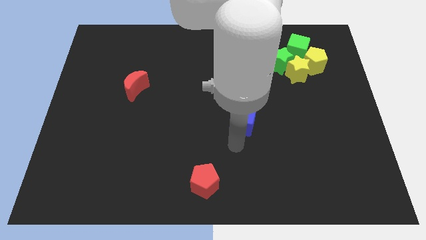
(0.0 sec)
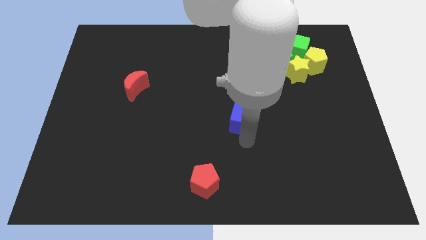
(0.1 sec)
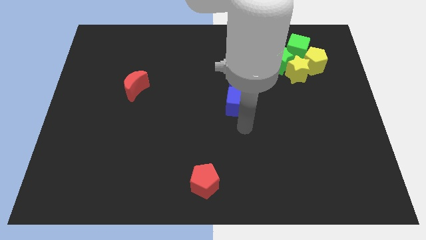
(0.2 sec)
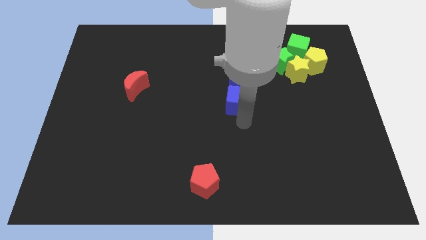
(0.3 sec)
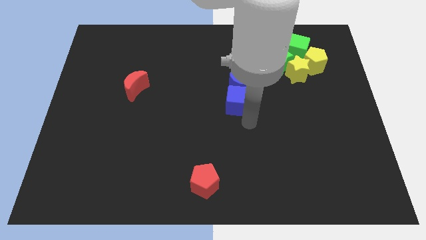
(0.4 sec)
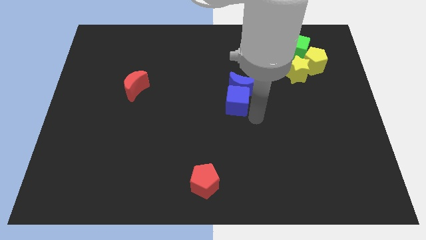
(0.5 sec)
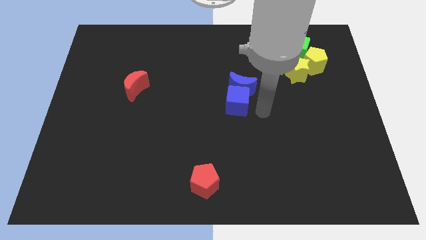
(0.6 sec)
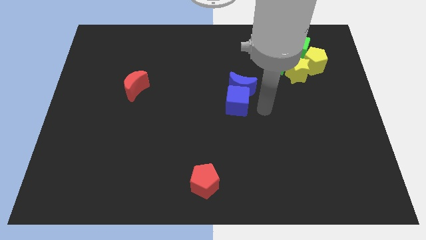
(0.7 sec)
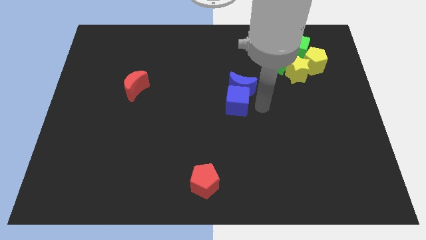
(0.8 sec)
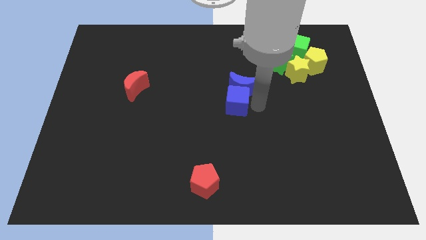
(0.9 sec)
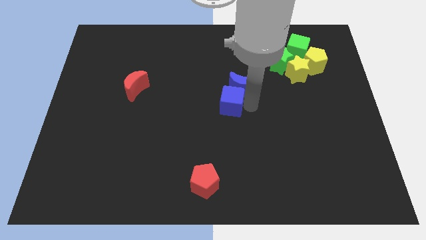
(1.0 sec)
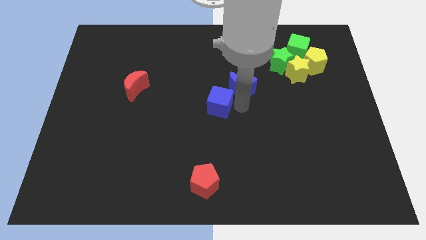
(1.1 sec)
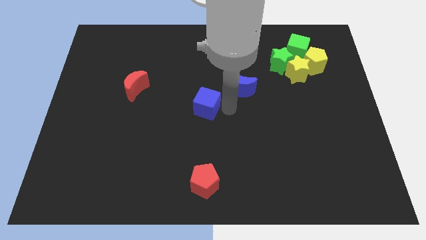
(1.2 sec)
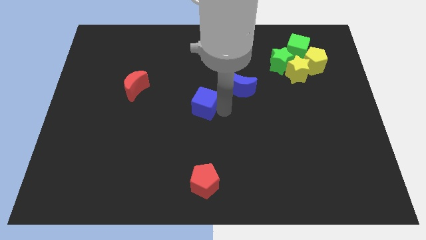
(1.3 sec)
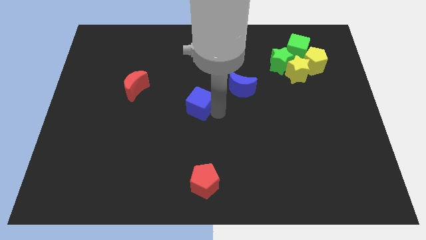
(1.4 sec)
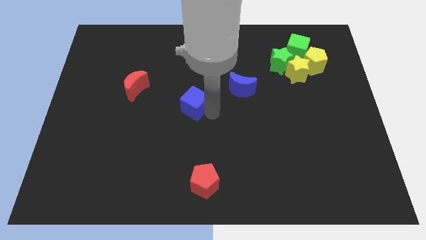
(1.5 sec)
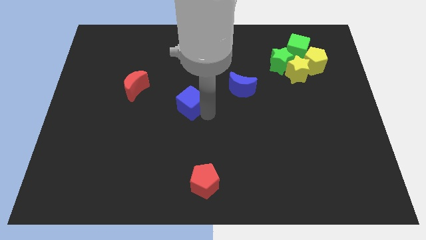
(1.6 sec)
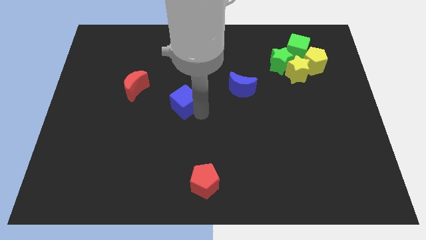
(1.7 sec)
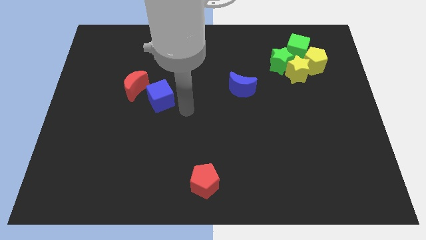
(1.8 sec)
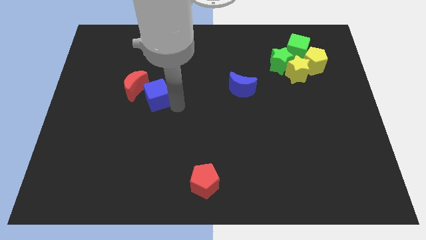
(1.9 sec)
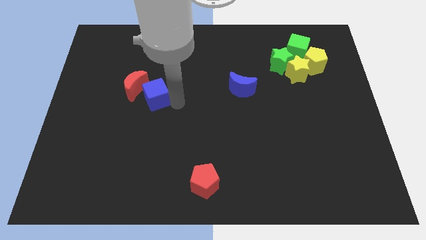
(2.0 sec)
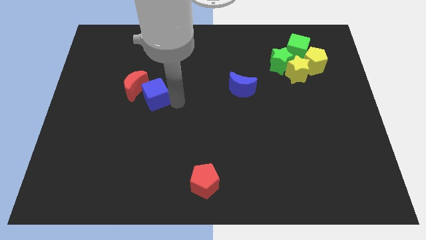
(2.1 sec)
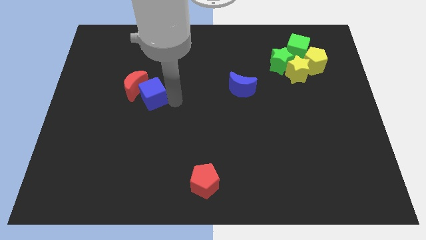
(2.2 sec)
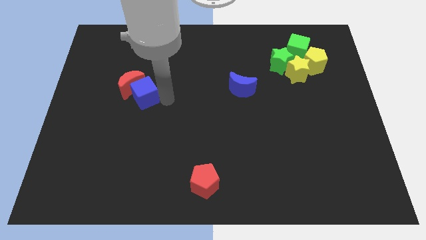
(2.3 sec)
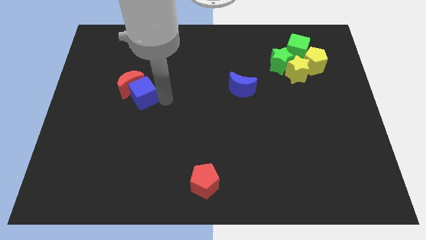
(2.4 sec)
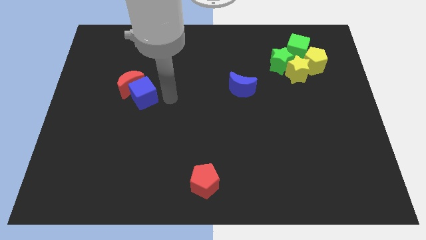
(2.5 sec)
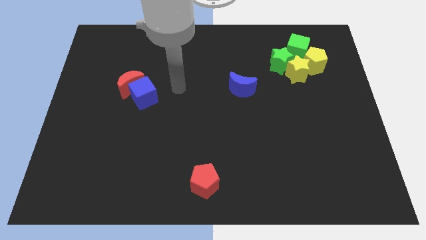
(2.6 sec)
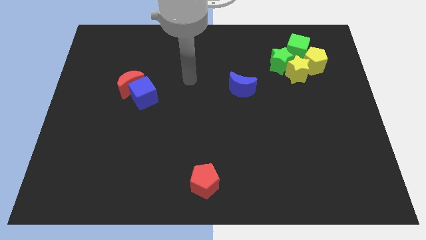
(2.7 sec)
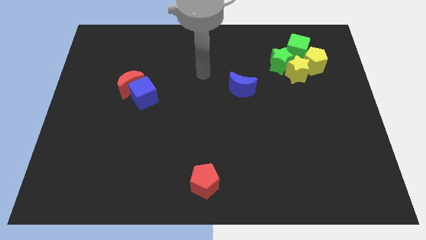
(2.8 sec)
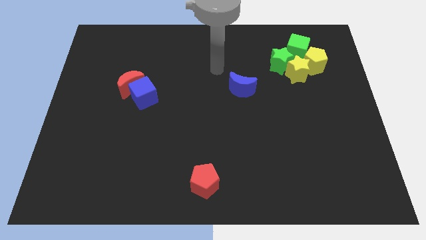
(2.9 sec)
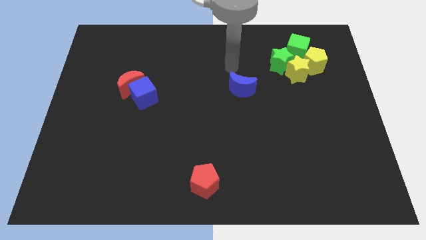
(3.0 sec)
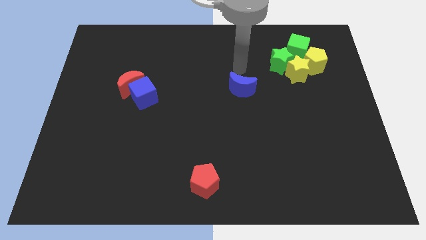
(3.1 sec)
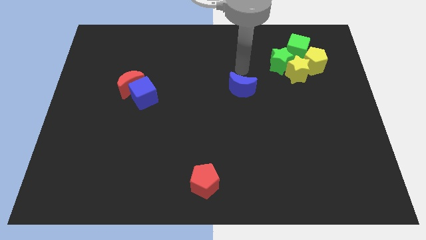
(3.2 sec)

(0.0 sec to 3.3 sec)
move the blue cube to the right of the red crescent

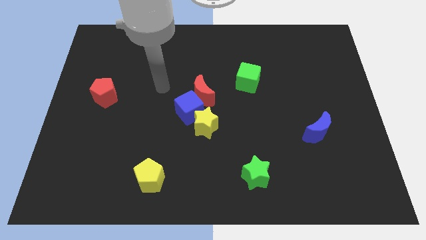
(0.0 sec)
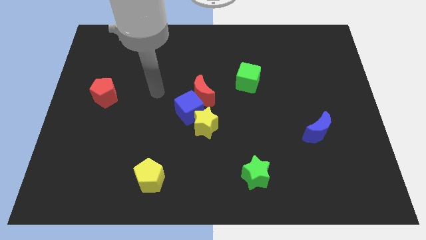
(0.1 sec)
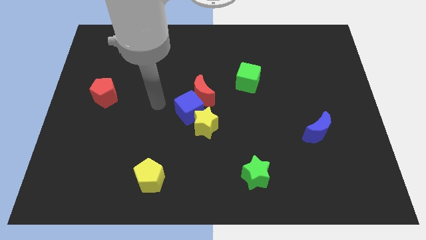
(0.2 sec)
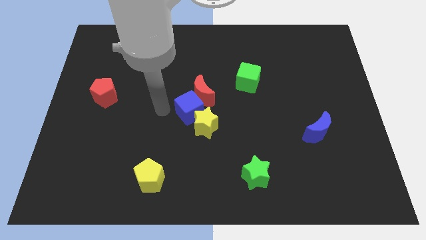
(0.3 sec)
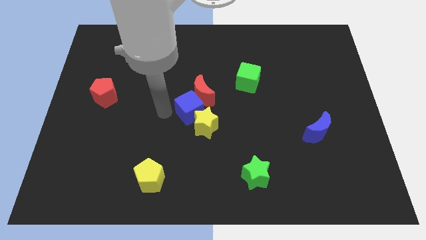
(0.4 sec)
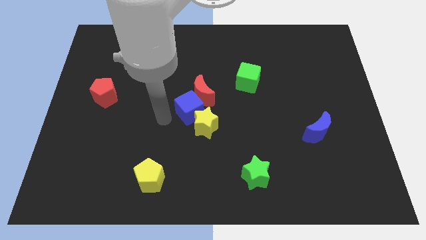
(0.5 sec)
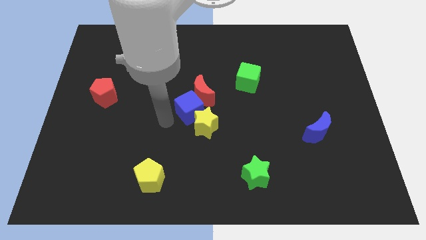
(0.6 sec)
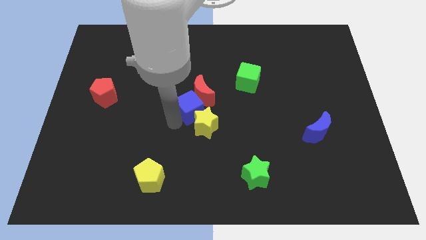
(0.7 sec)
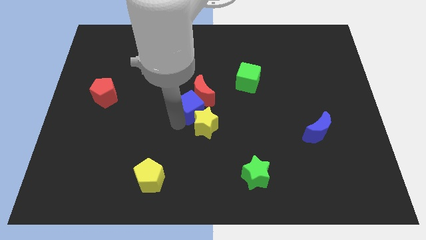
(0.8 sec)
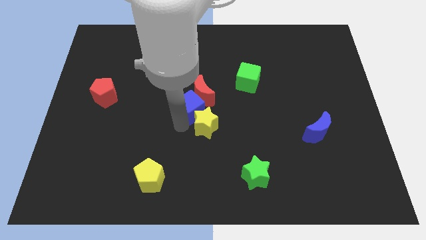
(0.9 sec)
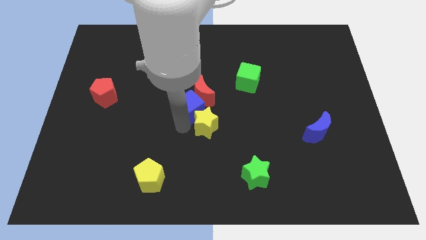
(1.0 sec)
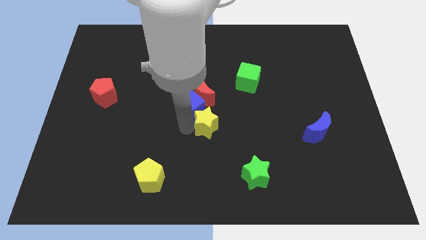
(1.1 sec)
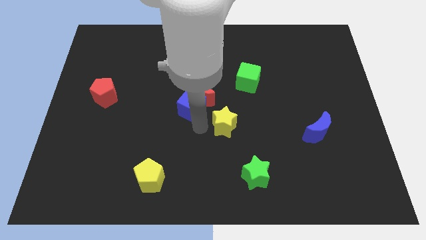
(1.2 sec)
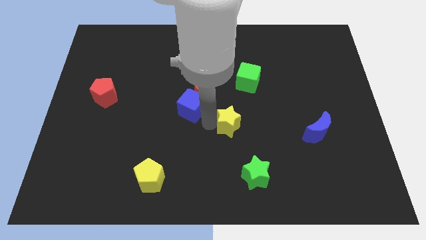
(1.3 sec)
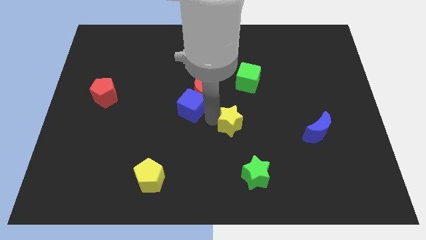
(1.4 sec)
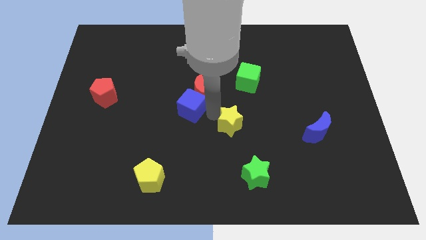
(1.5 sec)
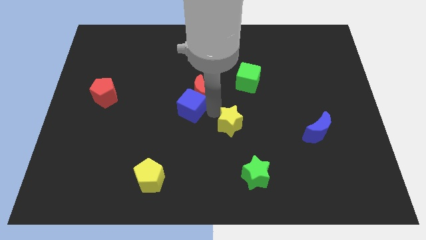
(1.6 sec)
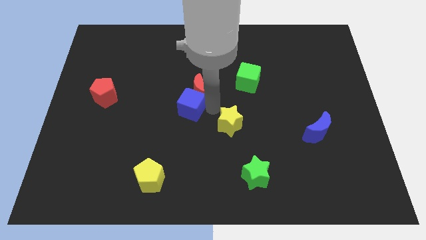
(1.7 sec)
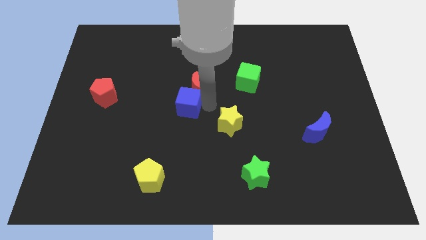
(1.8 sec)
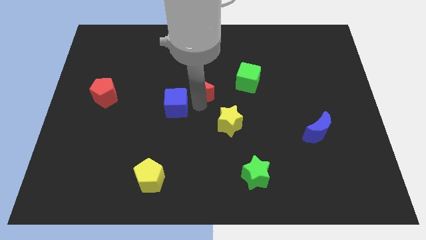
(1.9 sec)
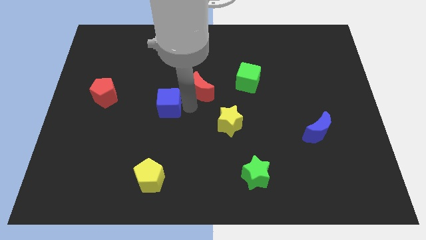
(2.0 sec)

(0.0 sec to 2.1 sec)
separate the yellow star from the blue cube

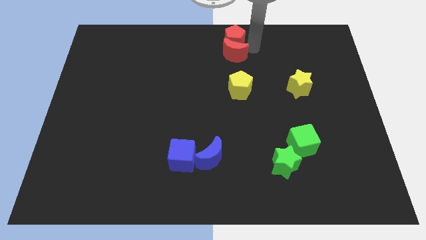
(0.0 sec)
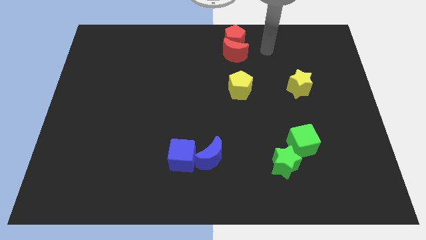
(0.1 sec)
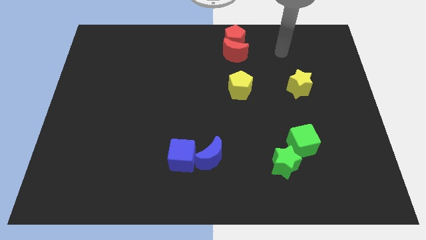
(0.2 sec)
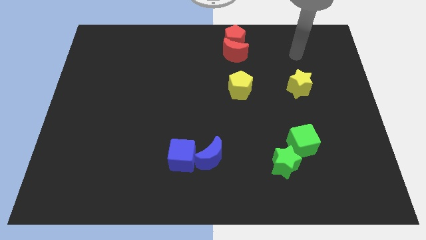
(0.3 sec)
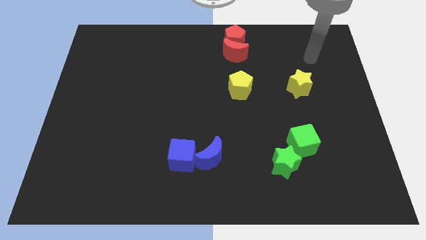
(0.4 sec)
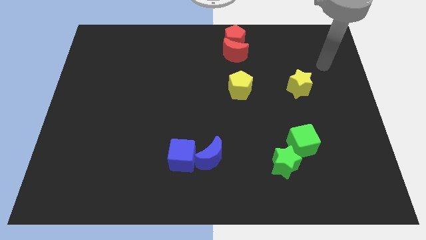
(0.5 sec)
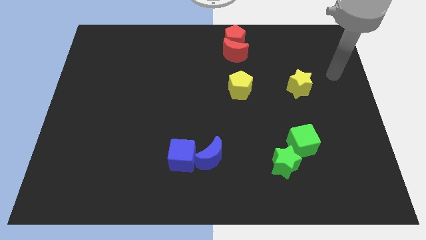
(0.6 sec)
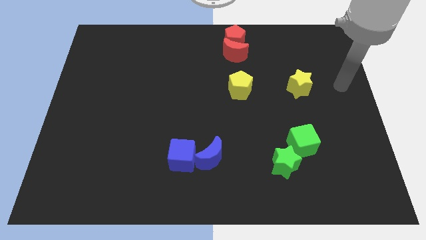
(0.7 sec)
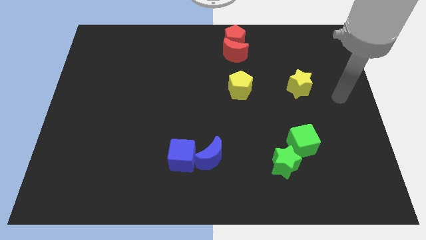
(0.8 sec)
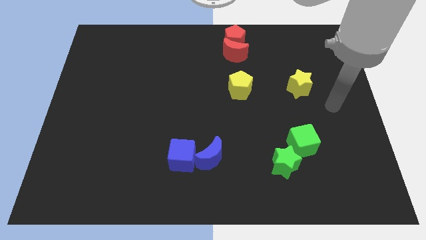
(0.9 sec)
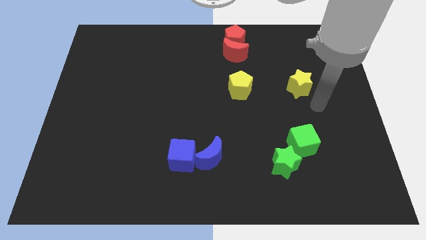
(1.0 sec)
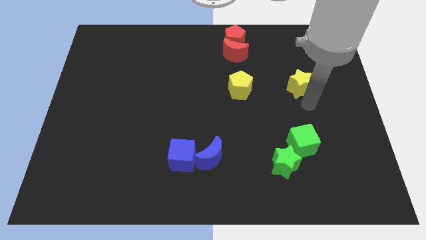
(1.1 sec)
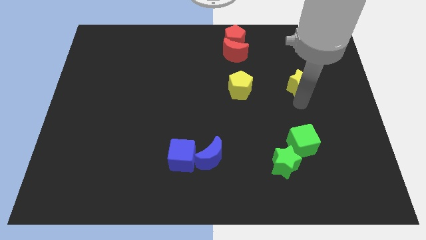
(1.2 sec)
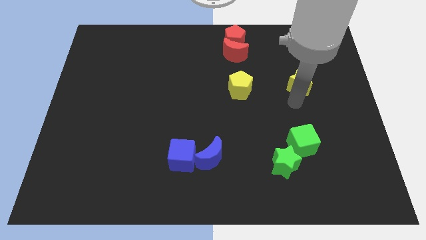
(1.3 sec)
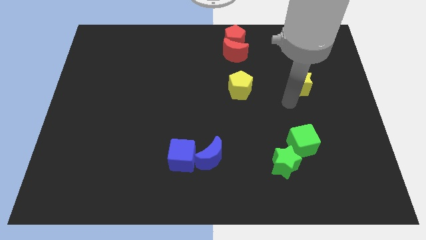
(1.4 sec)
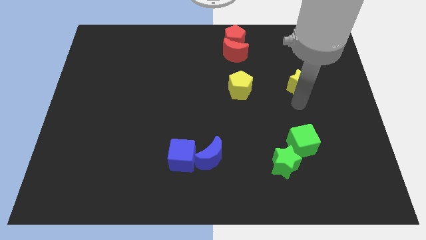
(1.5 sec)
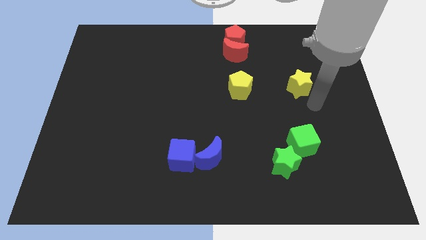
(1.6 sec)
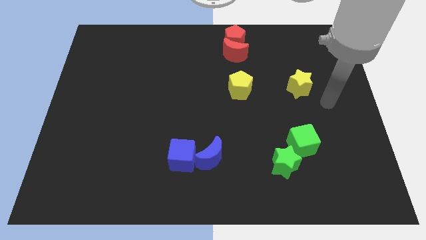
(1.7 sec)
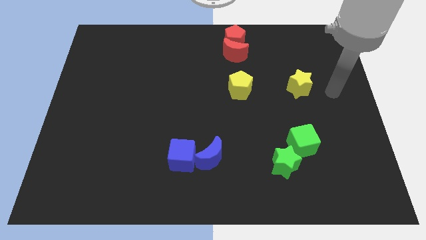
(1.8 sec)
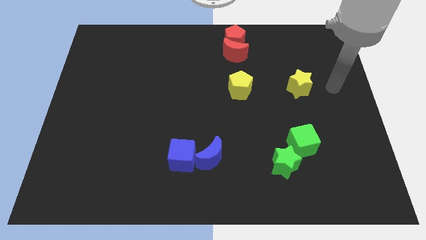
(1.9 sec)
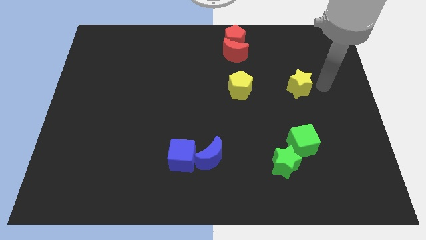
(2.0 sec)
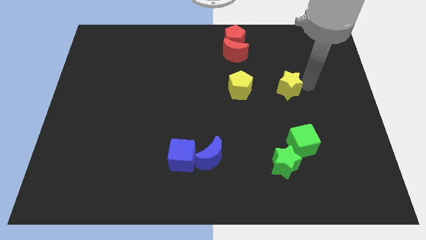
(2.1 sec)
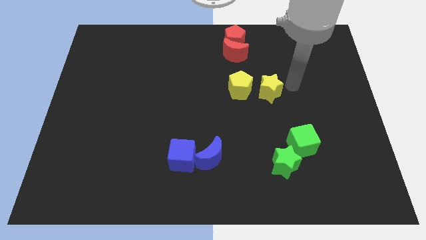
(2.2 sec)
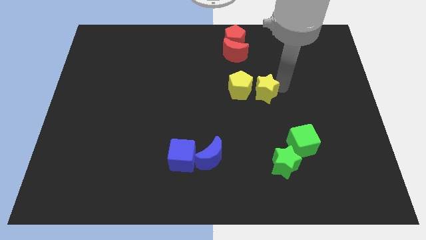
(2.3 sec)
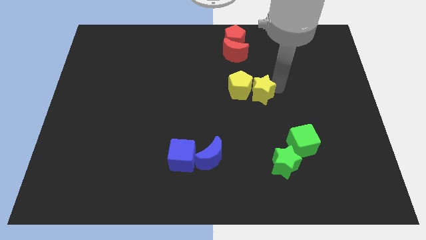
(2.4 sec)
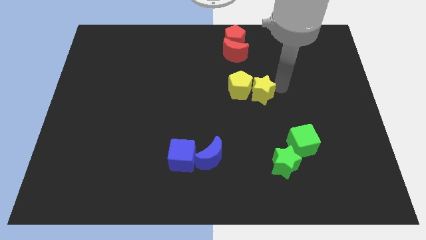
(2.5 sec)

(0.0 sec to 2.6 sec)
move the yellow star right to the yellow pentagon

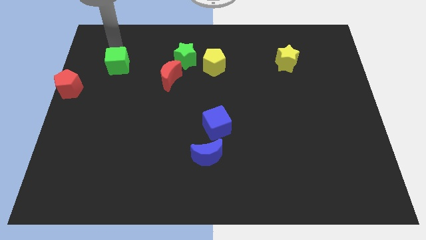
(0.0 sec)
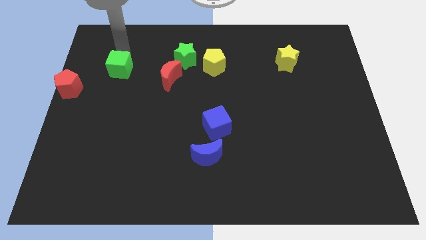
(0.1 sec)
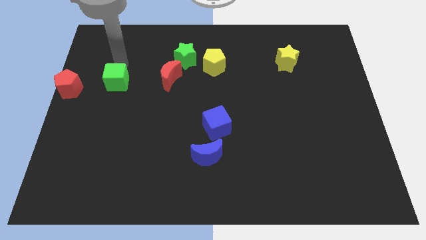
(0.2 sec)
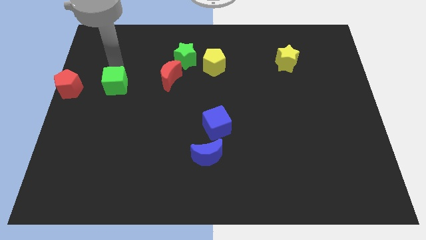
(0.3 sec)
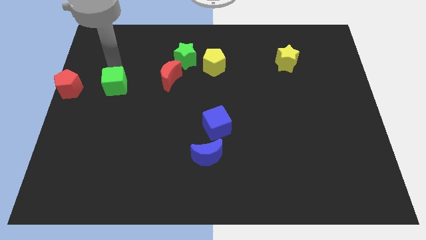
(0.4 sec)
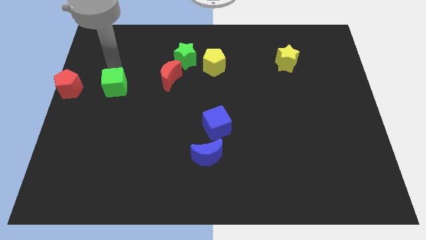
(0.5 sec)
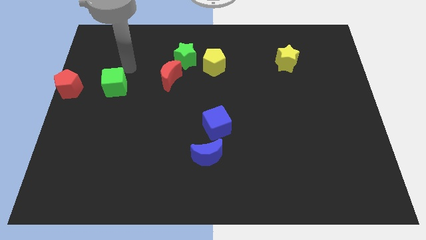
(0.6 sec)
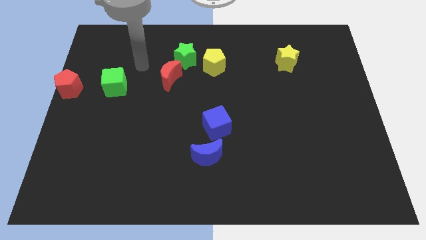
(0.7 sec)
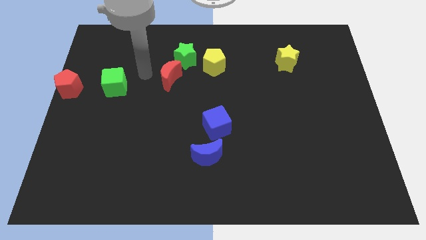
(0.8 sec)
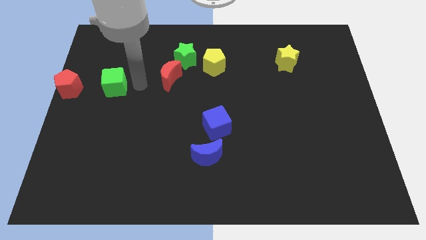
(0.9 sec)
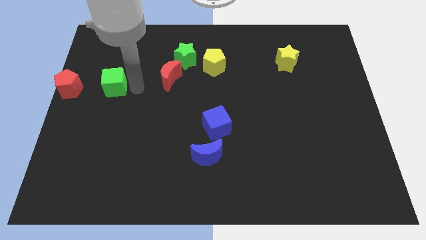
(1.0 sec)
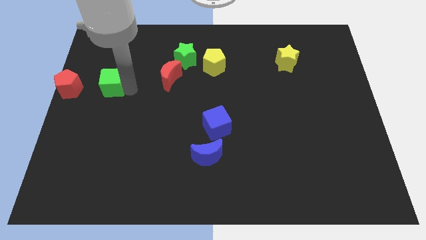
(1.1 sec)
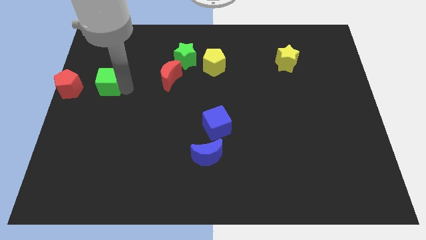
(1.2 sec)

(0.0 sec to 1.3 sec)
place the green cube parallel to the red pentagon
